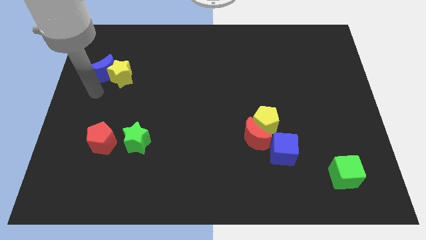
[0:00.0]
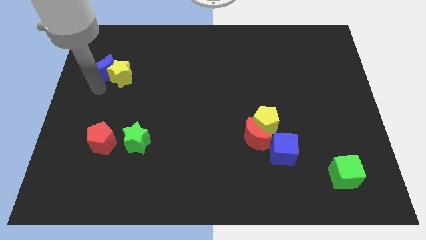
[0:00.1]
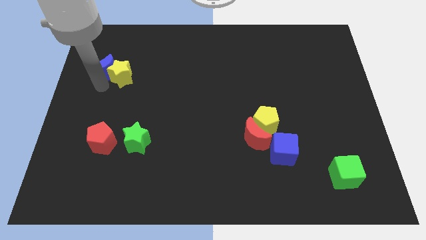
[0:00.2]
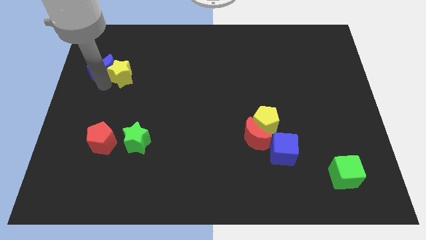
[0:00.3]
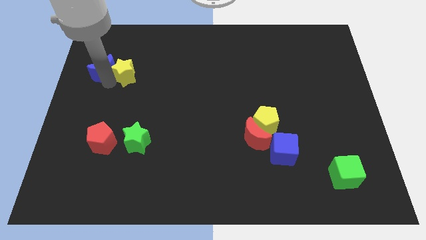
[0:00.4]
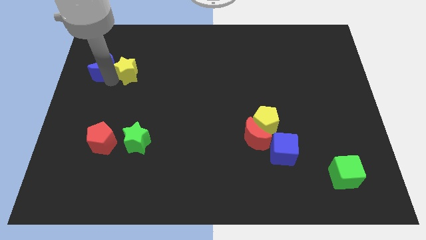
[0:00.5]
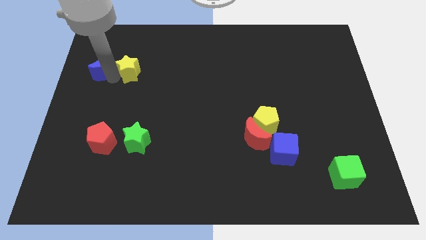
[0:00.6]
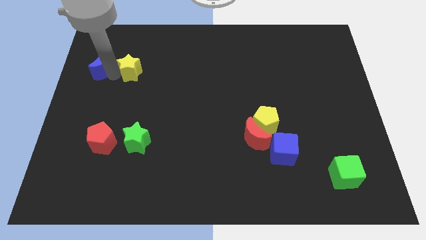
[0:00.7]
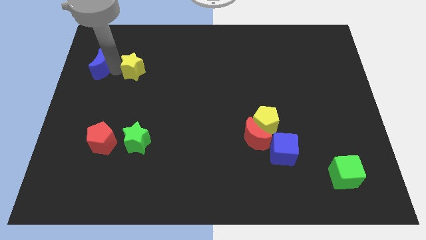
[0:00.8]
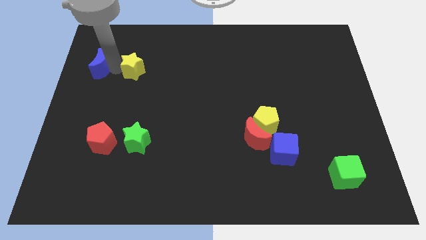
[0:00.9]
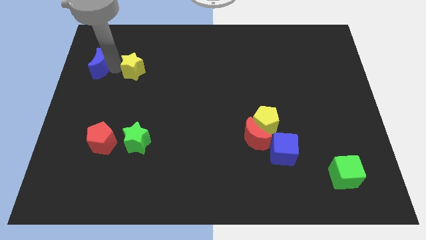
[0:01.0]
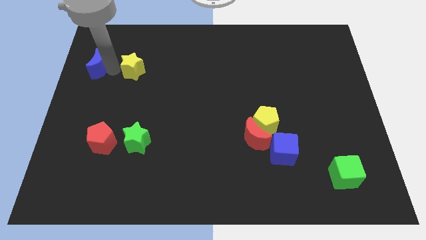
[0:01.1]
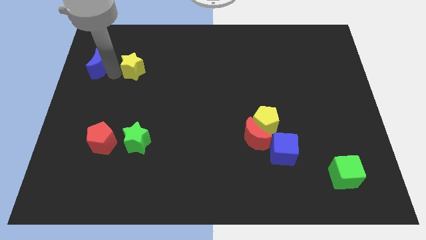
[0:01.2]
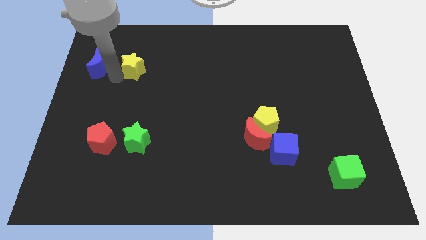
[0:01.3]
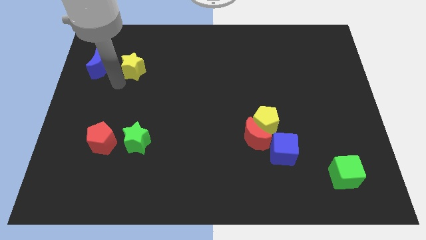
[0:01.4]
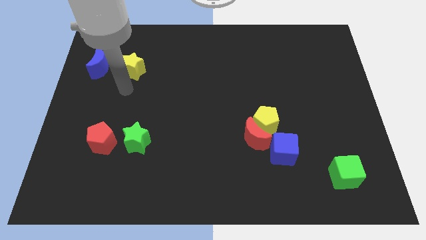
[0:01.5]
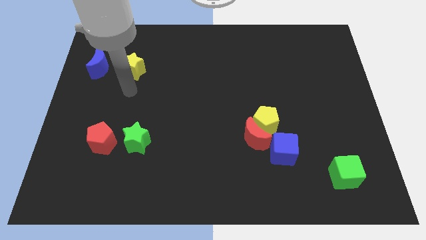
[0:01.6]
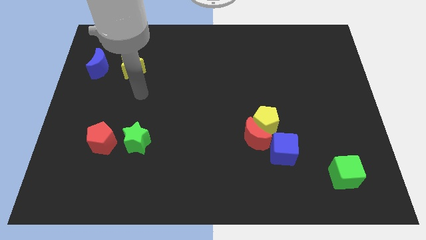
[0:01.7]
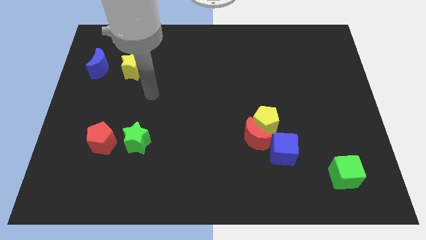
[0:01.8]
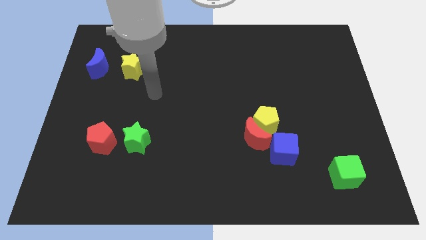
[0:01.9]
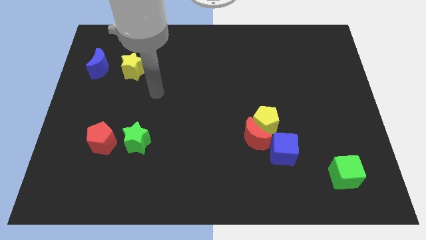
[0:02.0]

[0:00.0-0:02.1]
separate the yellow star and blue crescent from each other

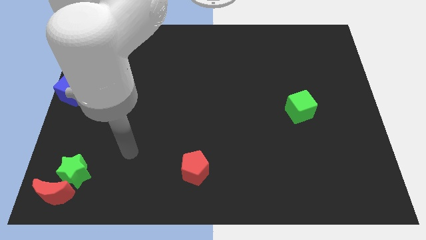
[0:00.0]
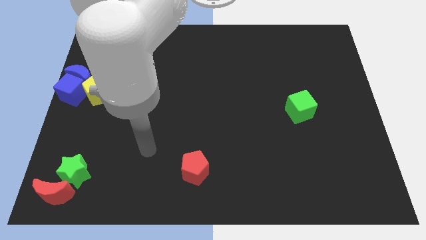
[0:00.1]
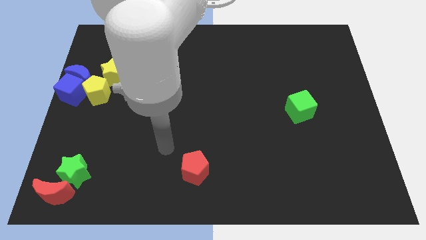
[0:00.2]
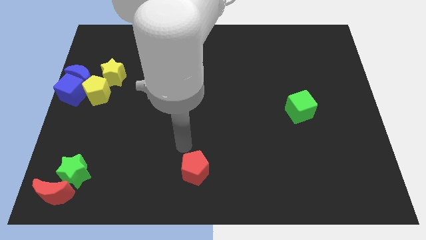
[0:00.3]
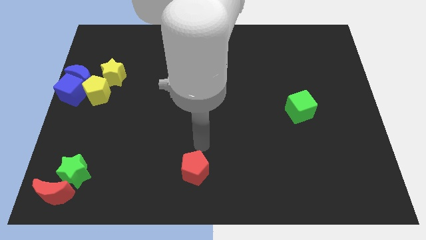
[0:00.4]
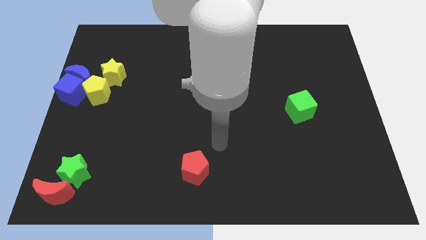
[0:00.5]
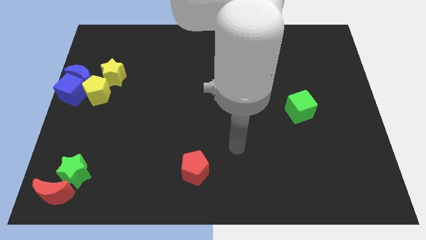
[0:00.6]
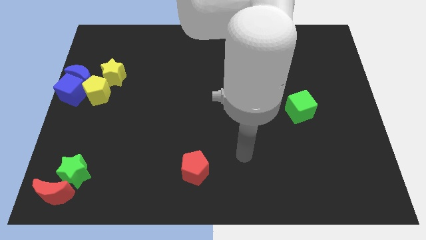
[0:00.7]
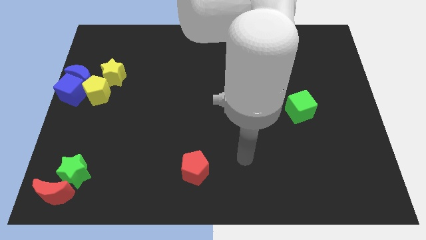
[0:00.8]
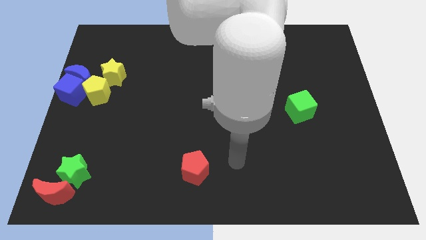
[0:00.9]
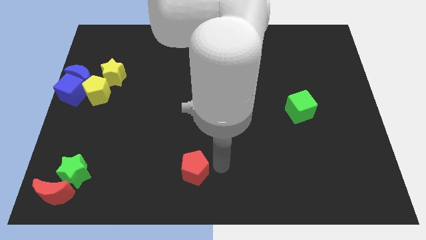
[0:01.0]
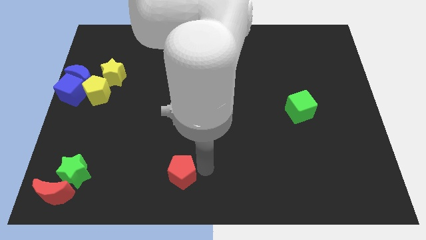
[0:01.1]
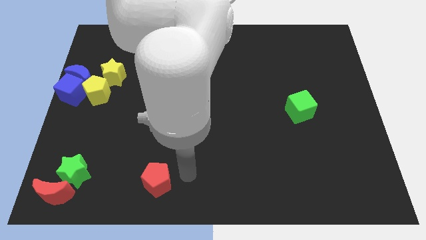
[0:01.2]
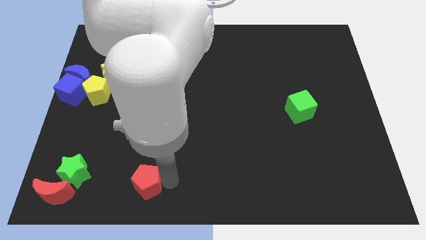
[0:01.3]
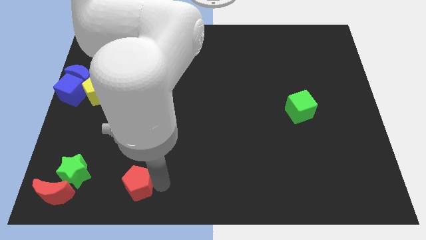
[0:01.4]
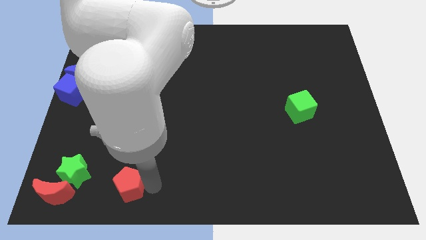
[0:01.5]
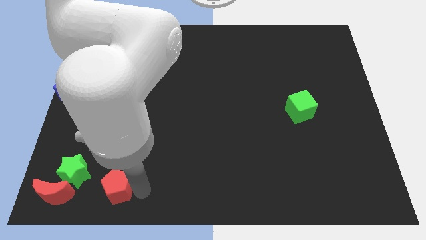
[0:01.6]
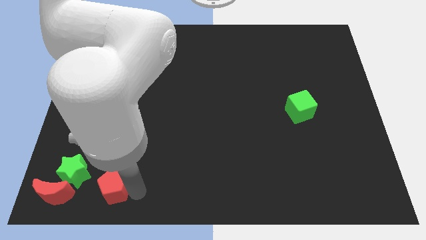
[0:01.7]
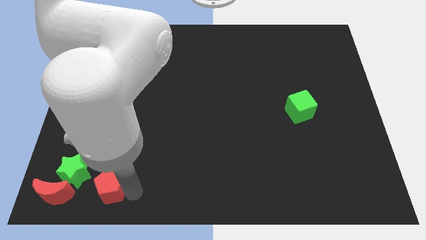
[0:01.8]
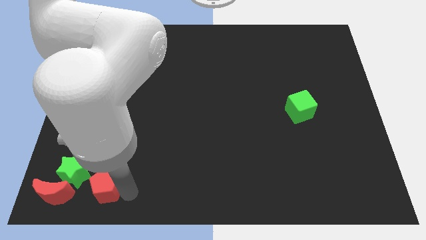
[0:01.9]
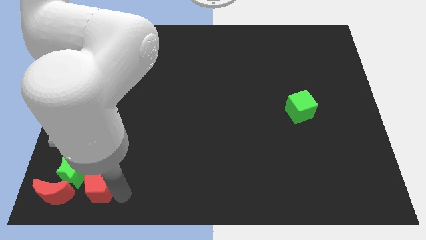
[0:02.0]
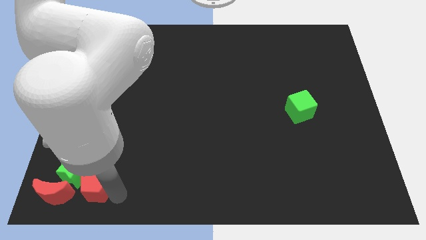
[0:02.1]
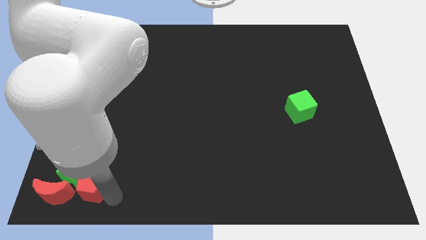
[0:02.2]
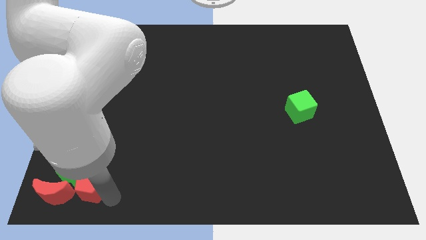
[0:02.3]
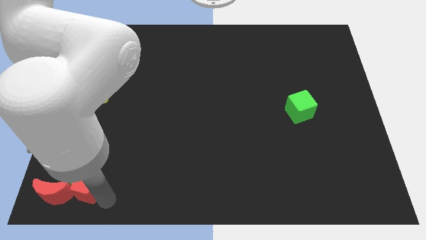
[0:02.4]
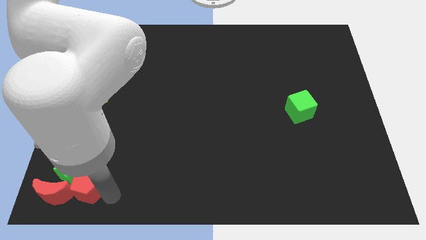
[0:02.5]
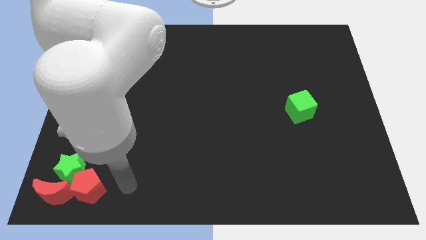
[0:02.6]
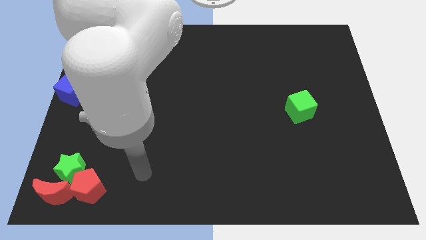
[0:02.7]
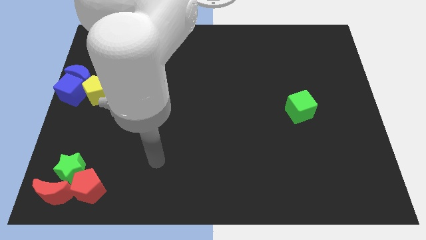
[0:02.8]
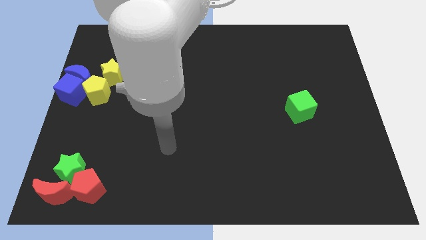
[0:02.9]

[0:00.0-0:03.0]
push the red pentagon to the right side of the red moon

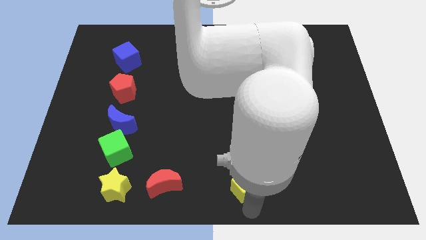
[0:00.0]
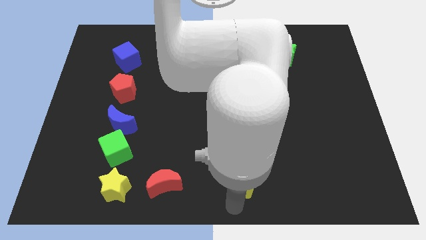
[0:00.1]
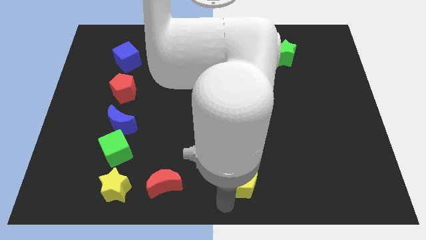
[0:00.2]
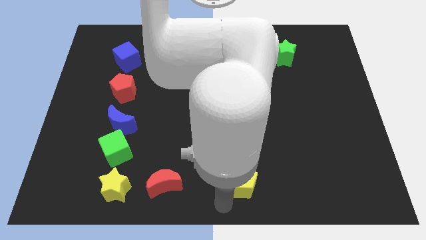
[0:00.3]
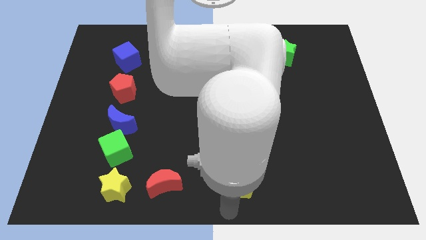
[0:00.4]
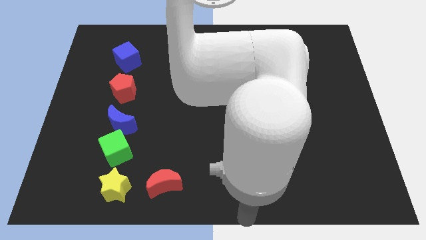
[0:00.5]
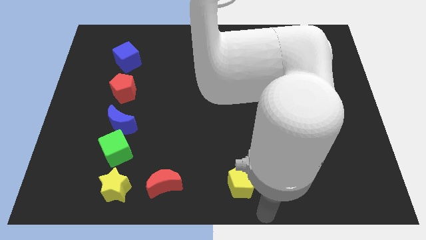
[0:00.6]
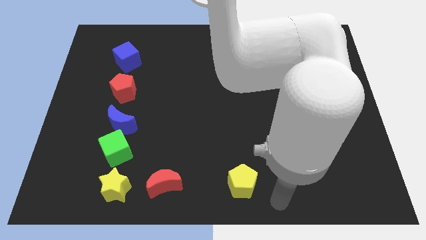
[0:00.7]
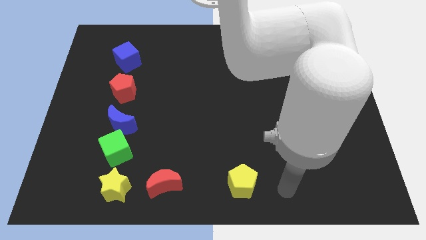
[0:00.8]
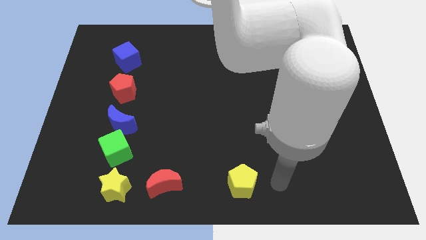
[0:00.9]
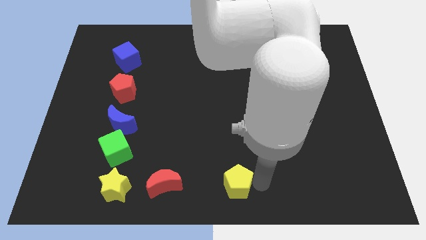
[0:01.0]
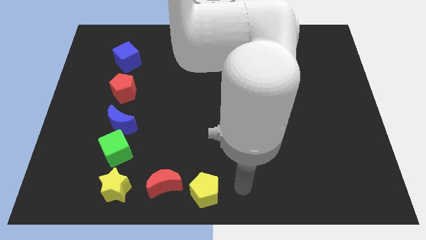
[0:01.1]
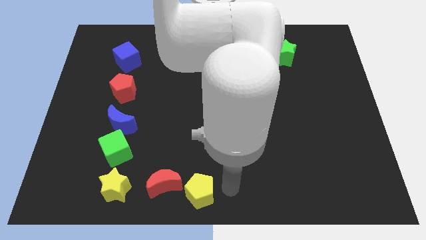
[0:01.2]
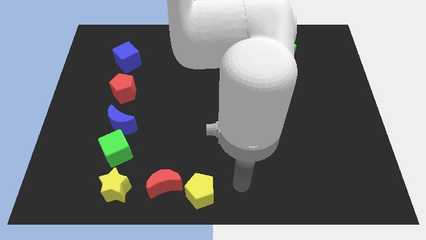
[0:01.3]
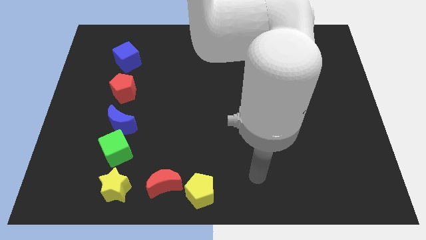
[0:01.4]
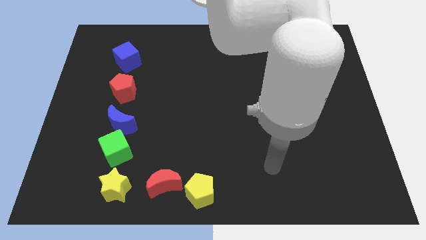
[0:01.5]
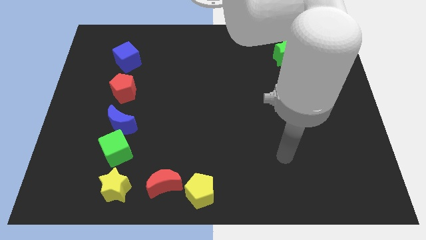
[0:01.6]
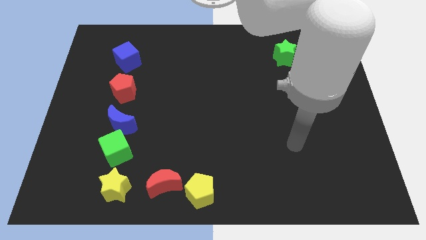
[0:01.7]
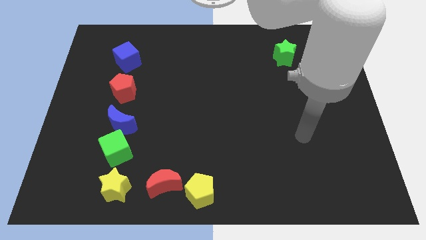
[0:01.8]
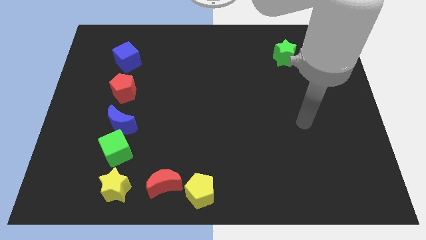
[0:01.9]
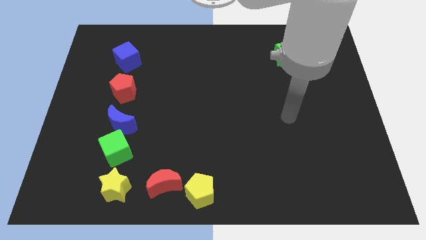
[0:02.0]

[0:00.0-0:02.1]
push the yellow pentagon into the red crescent

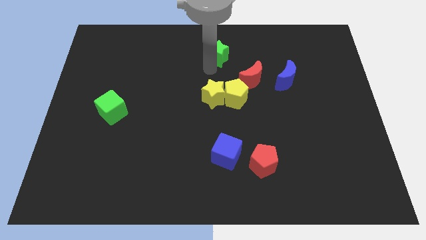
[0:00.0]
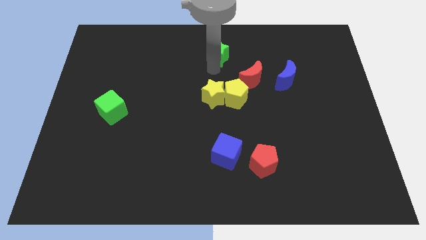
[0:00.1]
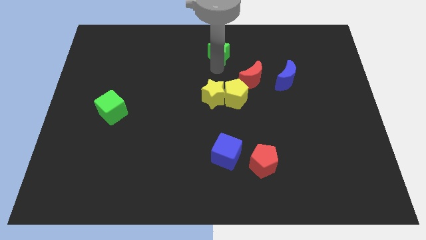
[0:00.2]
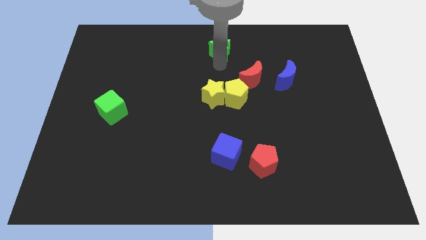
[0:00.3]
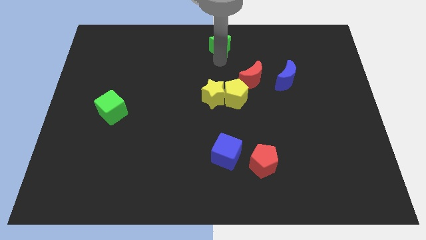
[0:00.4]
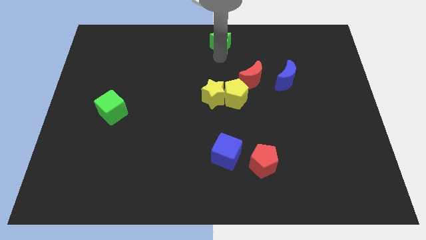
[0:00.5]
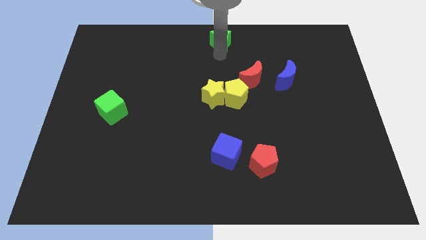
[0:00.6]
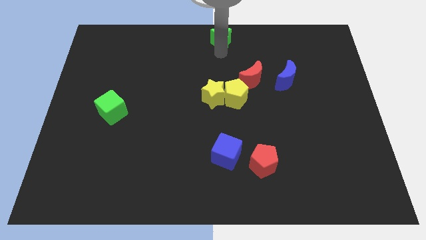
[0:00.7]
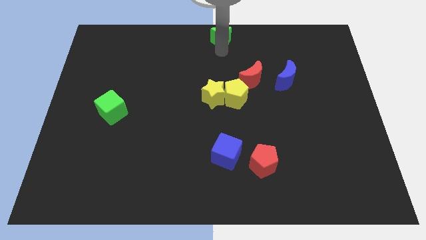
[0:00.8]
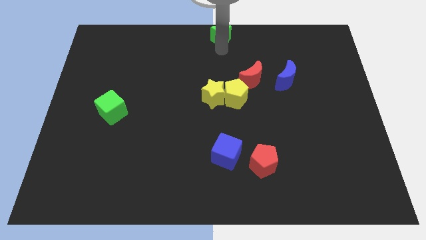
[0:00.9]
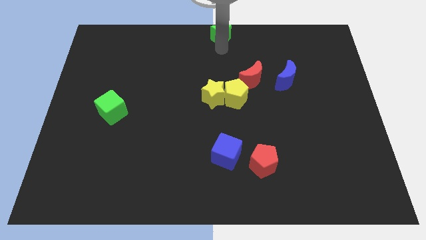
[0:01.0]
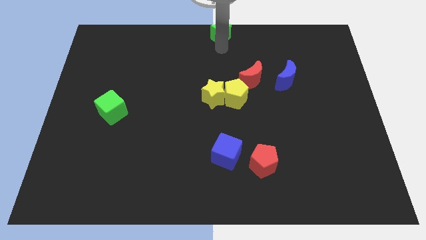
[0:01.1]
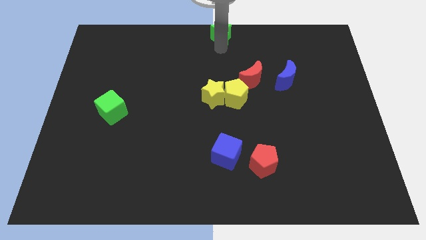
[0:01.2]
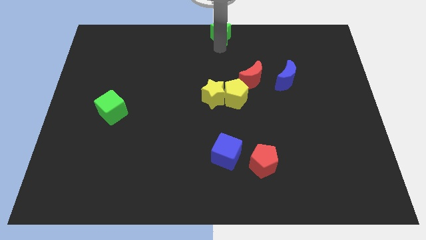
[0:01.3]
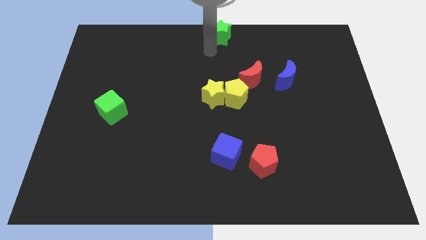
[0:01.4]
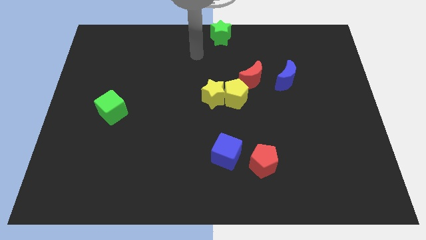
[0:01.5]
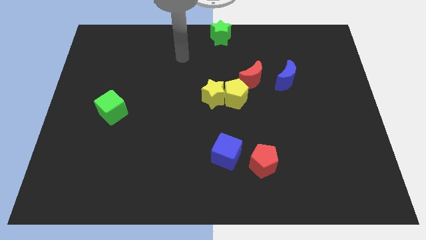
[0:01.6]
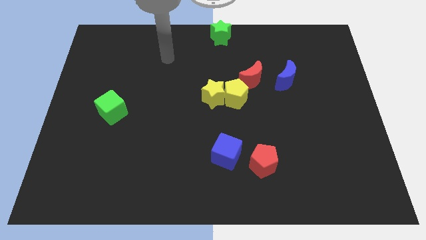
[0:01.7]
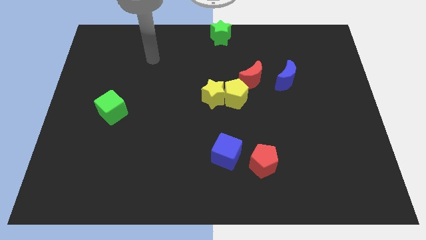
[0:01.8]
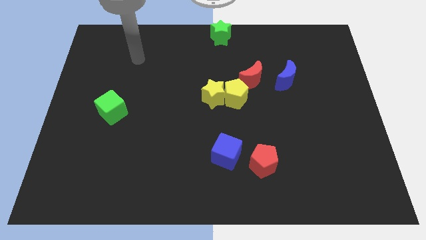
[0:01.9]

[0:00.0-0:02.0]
place green star to the top center of the board
